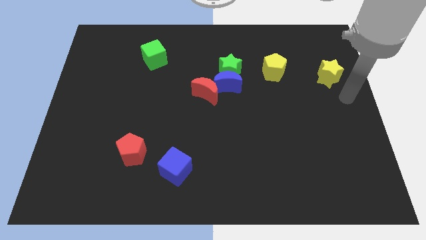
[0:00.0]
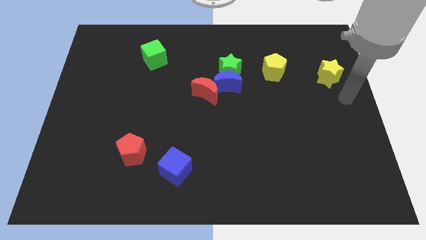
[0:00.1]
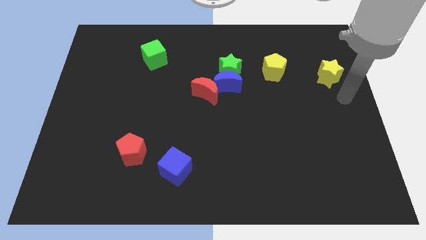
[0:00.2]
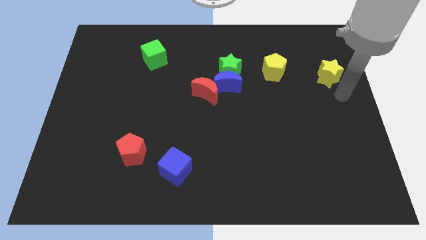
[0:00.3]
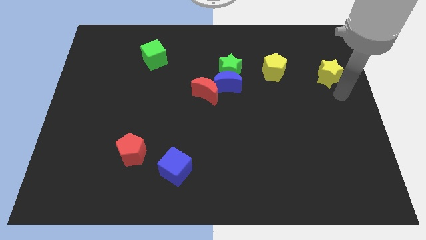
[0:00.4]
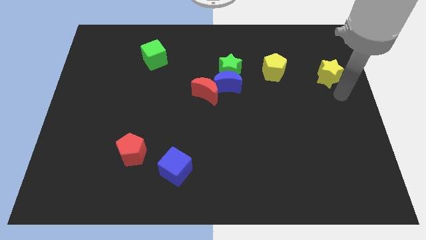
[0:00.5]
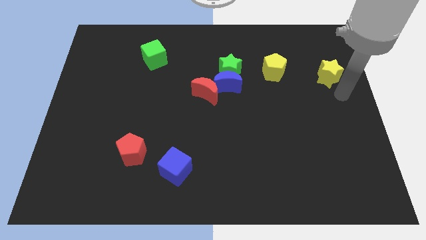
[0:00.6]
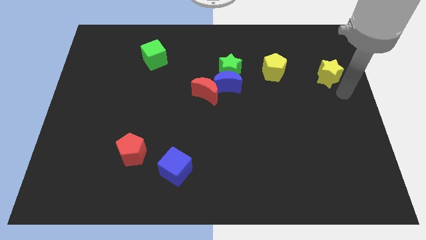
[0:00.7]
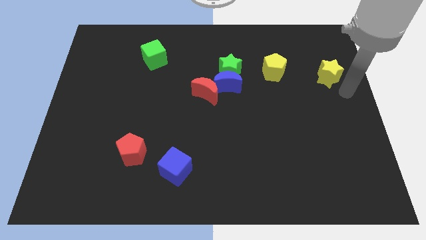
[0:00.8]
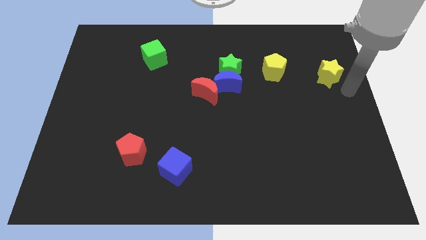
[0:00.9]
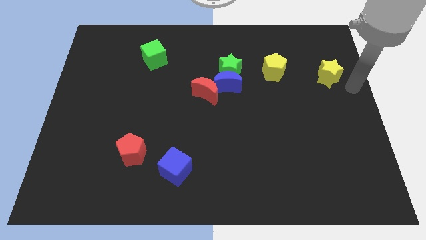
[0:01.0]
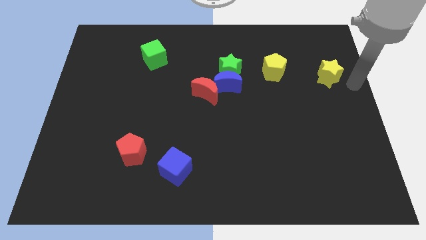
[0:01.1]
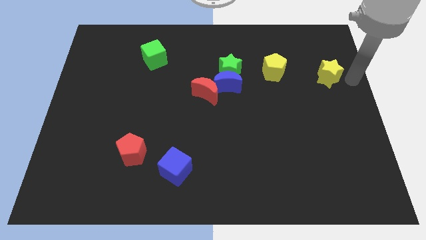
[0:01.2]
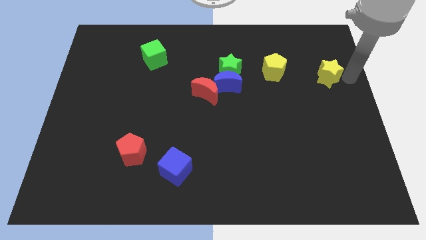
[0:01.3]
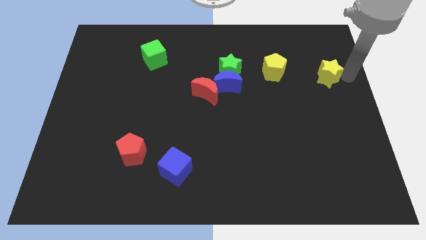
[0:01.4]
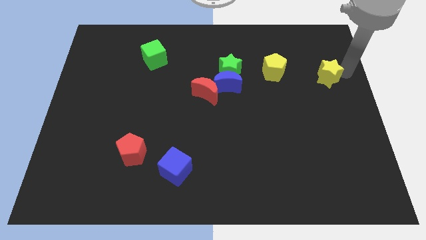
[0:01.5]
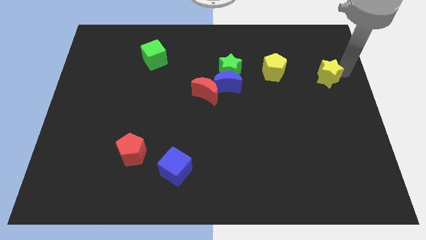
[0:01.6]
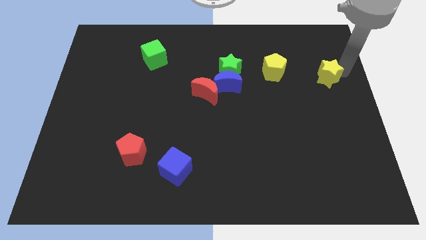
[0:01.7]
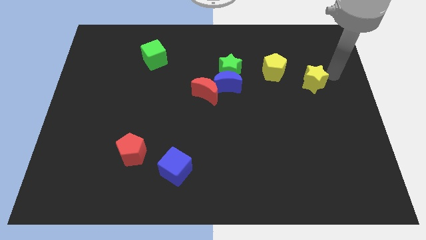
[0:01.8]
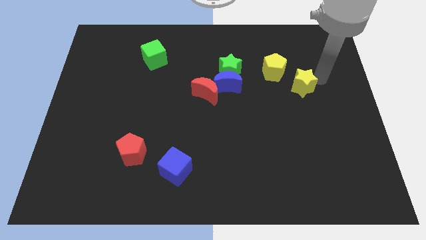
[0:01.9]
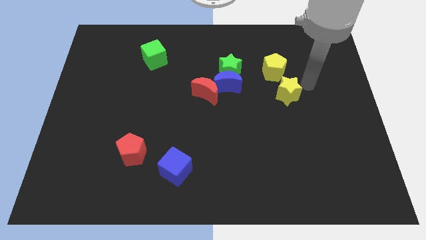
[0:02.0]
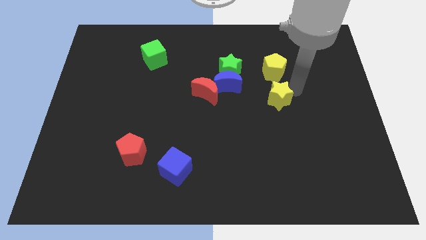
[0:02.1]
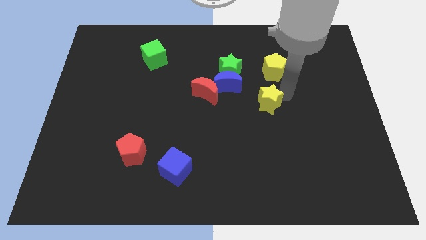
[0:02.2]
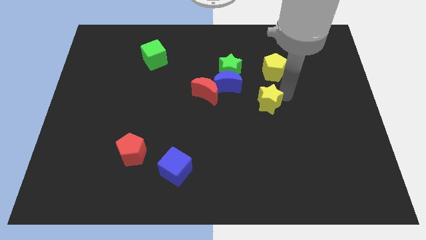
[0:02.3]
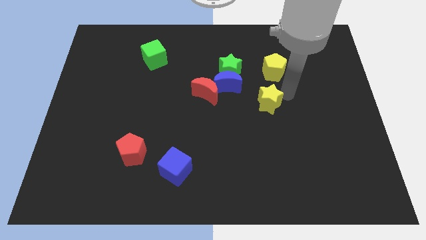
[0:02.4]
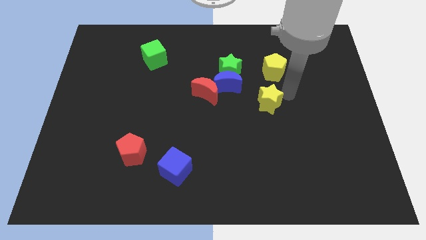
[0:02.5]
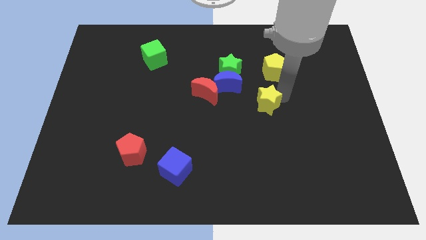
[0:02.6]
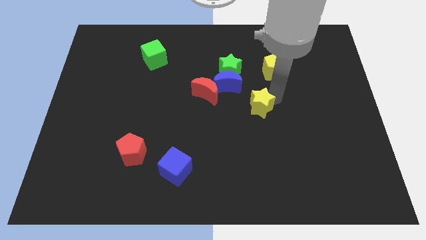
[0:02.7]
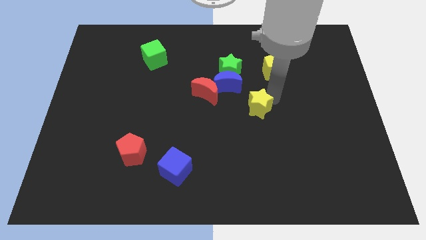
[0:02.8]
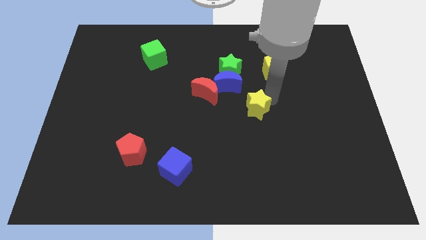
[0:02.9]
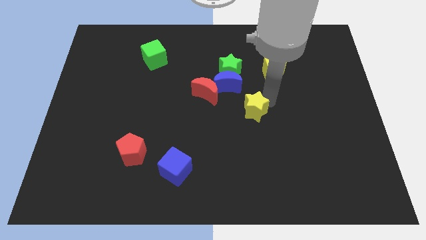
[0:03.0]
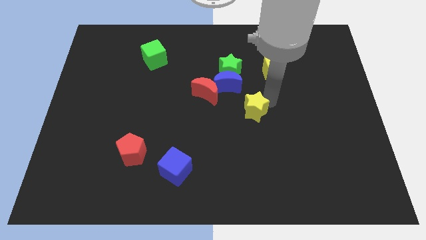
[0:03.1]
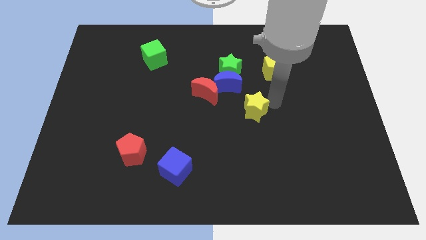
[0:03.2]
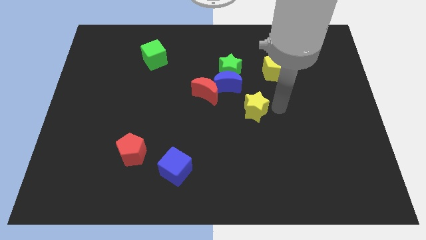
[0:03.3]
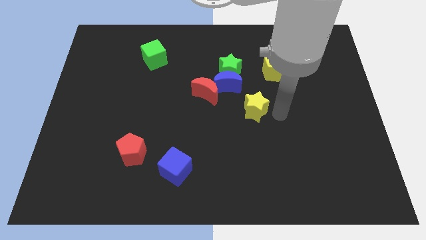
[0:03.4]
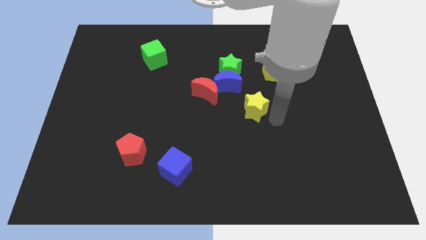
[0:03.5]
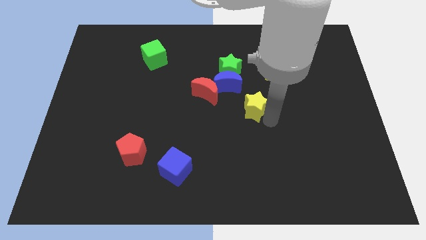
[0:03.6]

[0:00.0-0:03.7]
place yellow star diagonal to the yellow pentagon

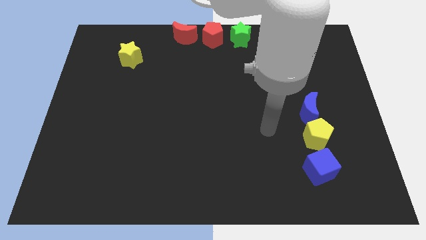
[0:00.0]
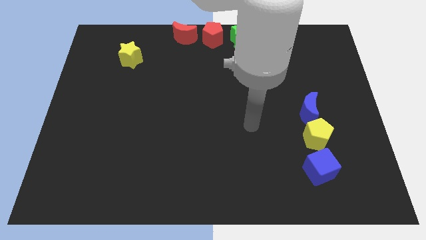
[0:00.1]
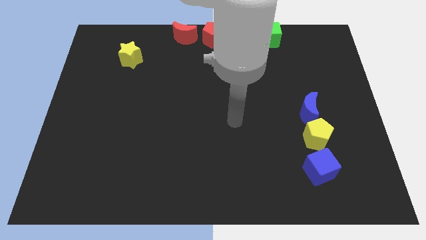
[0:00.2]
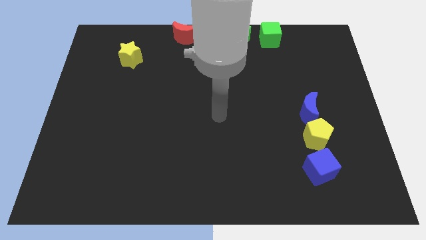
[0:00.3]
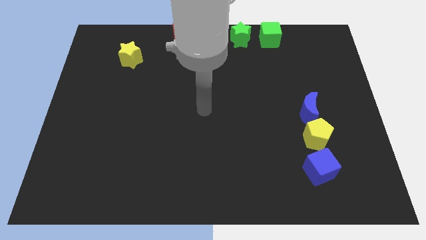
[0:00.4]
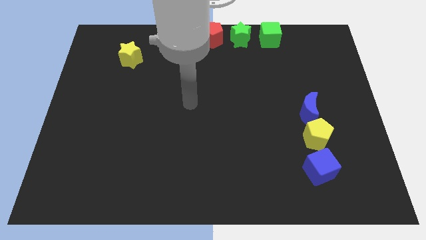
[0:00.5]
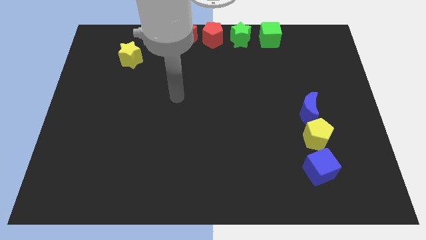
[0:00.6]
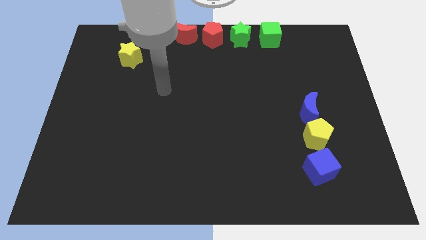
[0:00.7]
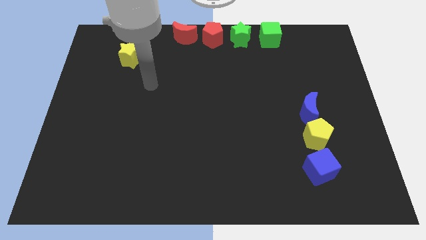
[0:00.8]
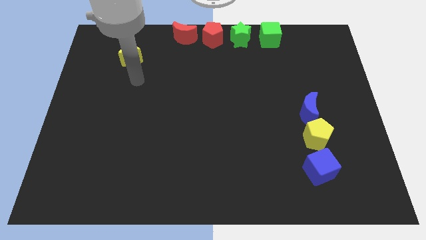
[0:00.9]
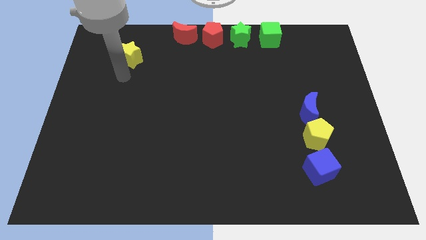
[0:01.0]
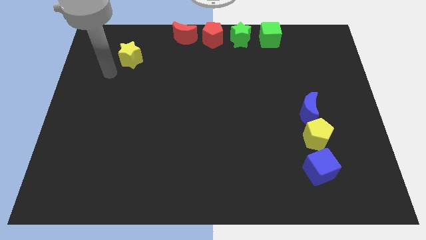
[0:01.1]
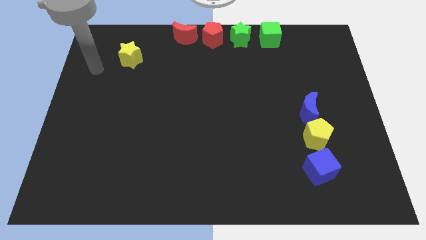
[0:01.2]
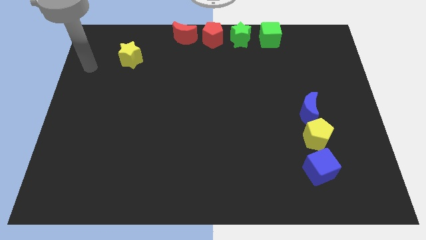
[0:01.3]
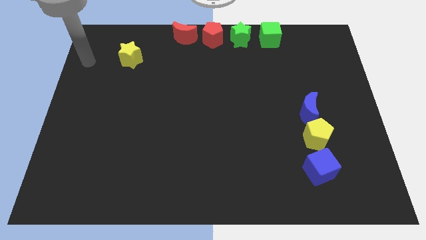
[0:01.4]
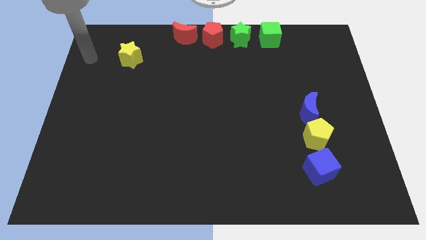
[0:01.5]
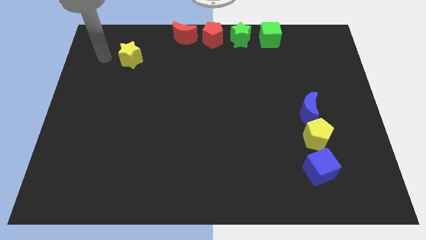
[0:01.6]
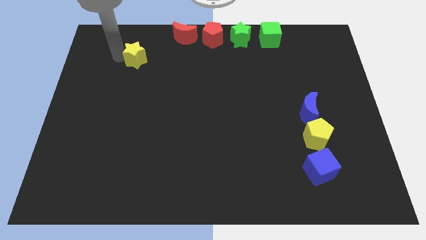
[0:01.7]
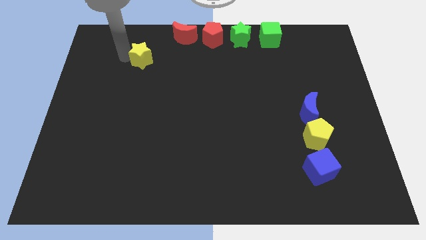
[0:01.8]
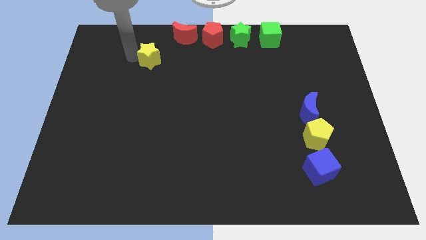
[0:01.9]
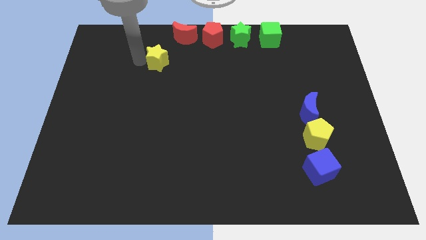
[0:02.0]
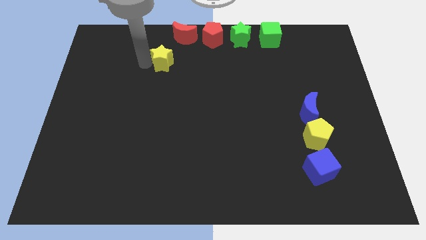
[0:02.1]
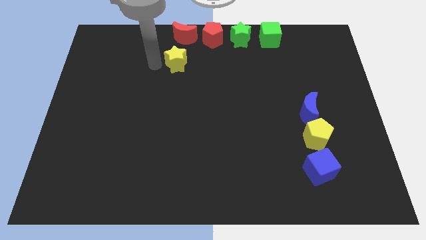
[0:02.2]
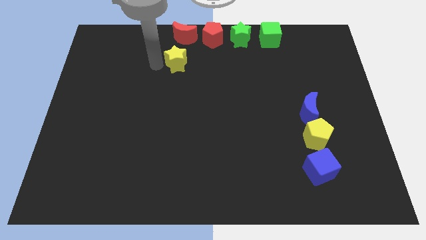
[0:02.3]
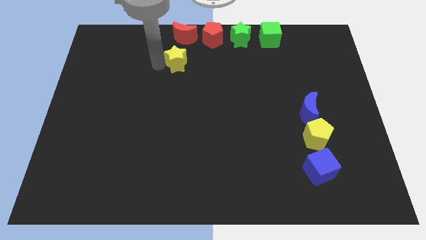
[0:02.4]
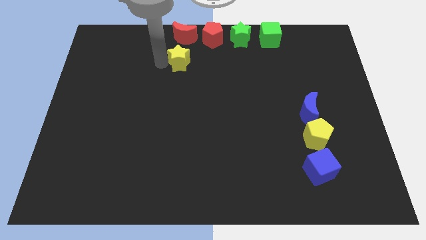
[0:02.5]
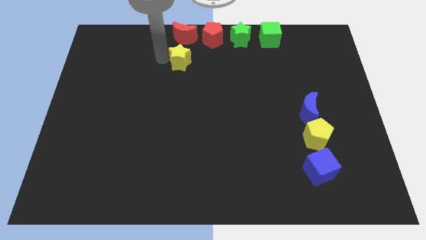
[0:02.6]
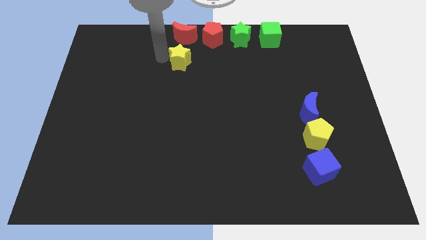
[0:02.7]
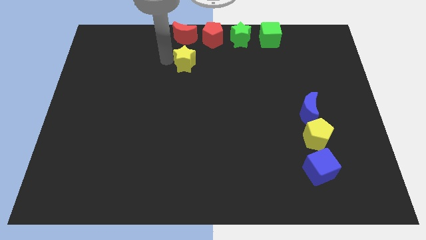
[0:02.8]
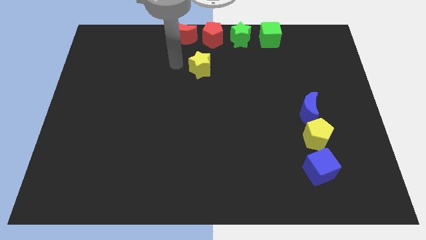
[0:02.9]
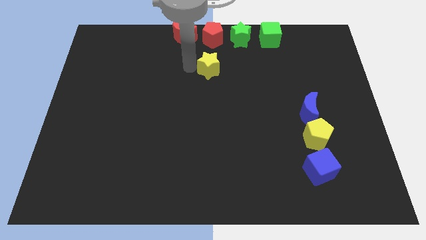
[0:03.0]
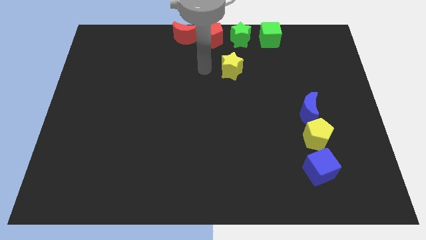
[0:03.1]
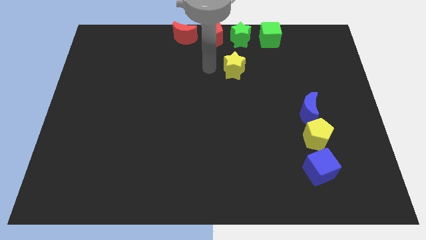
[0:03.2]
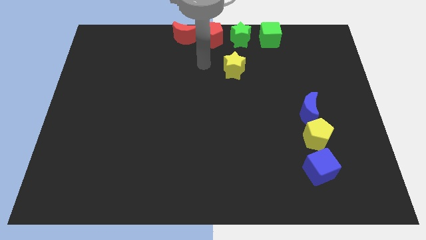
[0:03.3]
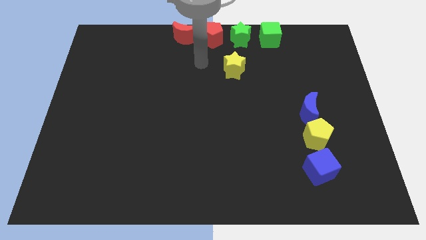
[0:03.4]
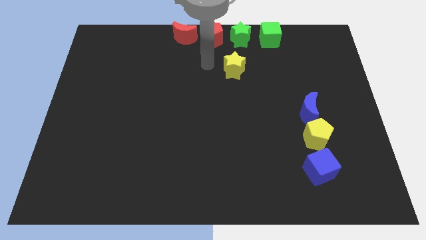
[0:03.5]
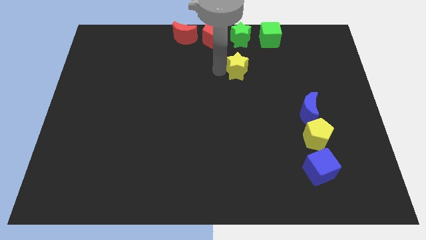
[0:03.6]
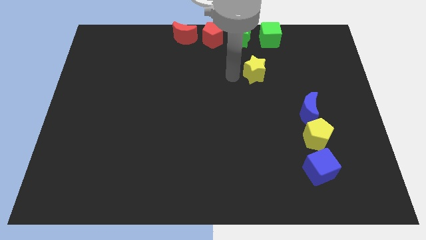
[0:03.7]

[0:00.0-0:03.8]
slide yellow star diagonally downwards

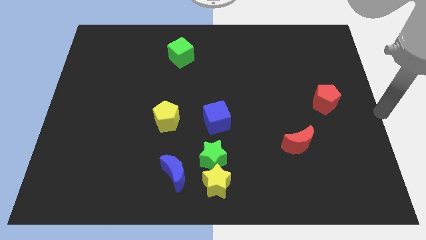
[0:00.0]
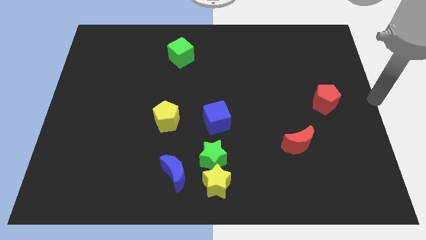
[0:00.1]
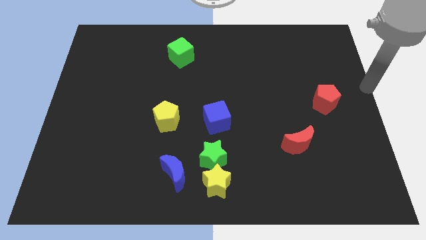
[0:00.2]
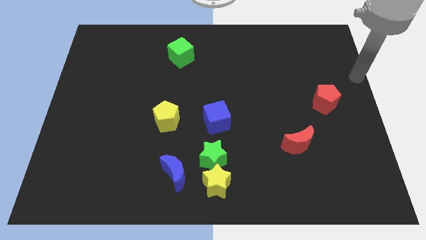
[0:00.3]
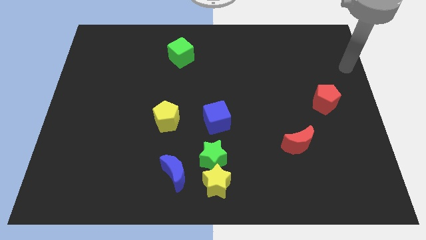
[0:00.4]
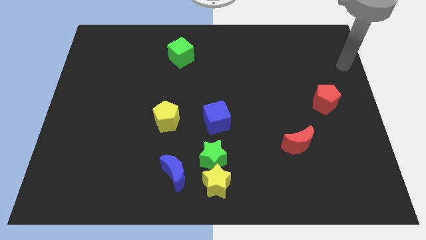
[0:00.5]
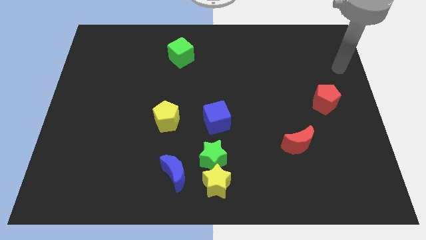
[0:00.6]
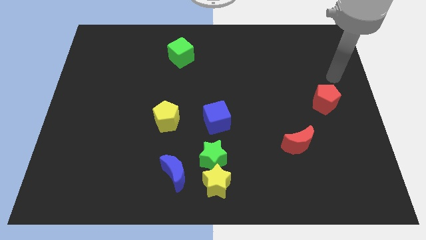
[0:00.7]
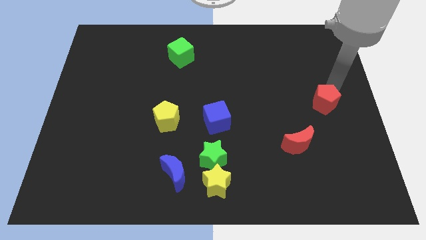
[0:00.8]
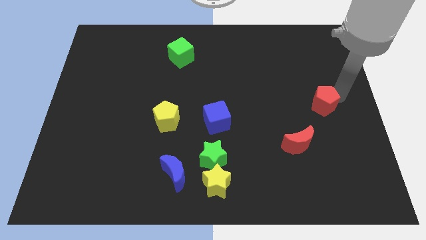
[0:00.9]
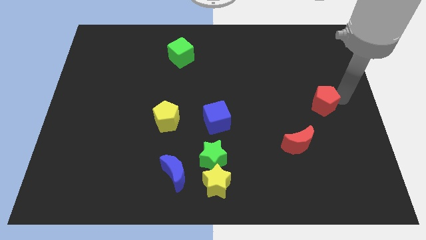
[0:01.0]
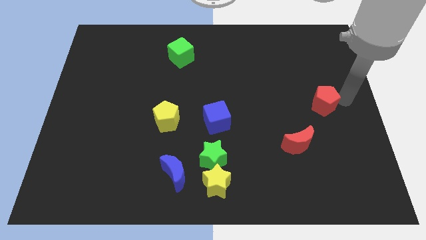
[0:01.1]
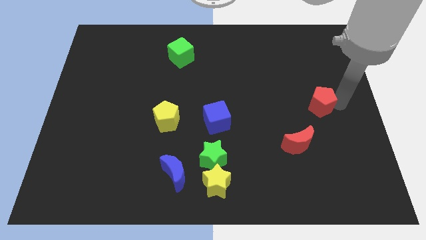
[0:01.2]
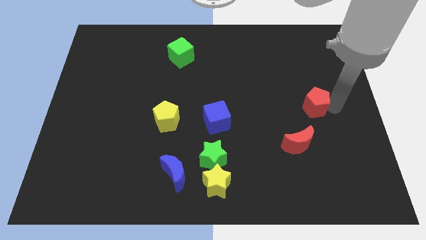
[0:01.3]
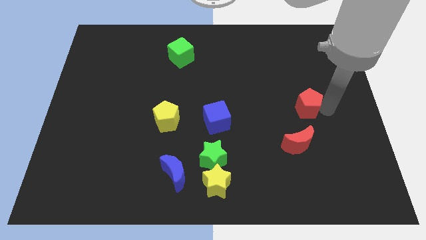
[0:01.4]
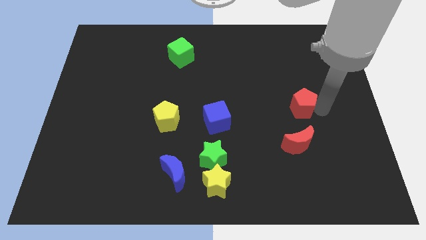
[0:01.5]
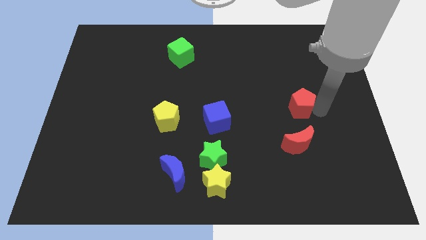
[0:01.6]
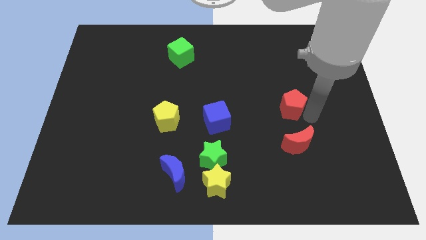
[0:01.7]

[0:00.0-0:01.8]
slightly push the red pentagon on top of red moon
